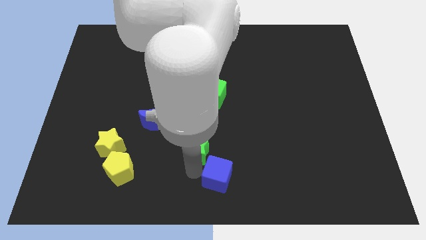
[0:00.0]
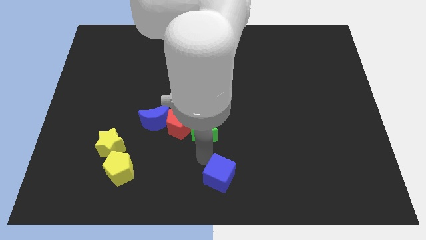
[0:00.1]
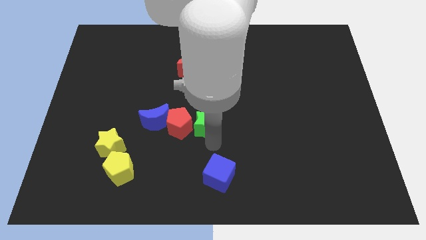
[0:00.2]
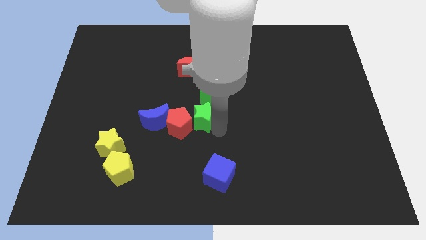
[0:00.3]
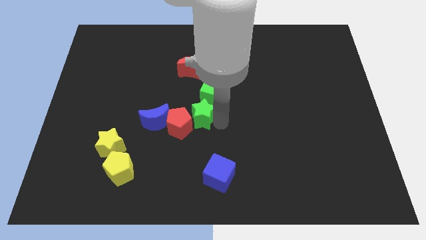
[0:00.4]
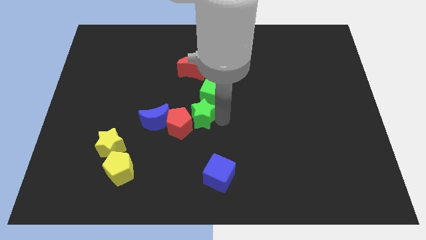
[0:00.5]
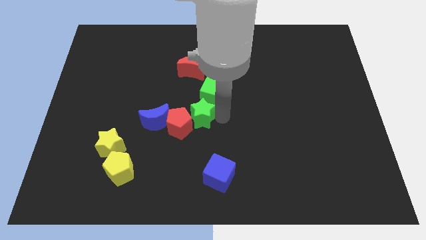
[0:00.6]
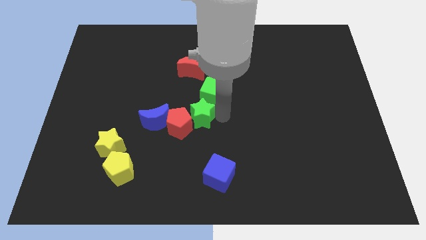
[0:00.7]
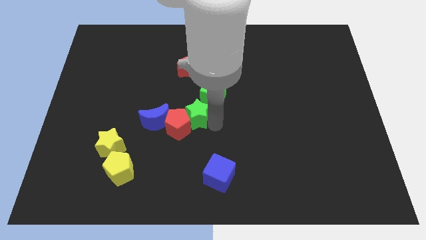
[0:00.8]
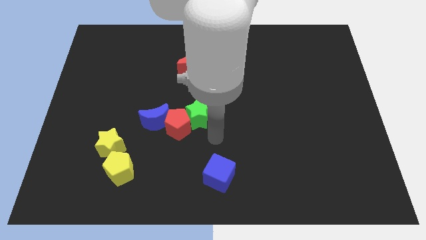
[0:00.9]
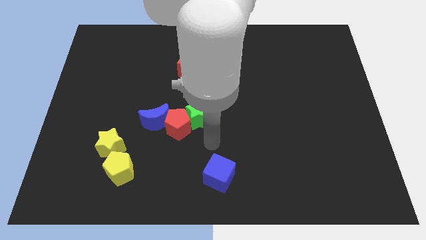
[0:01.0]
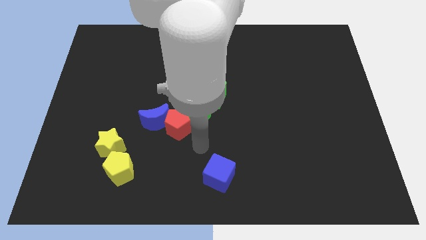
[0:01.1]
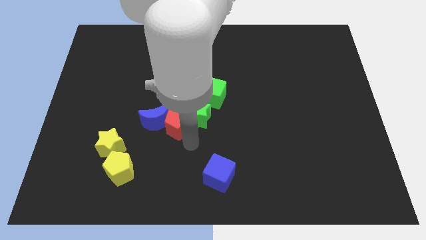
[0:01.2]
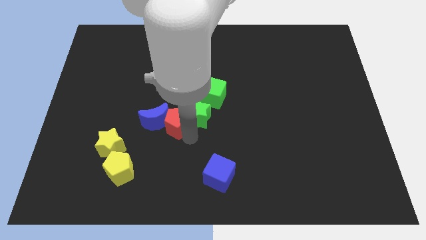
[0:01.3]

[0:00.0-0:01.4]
place the green star in between the red pentagon and the green cube

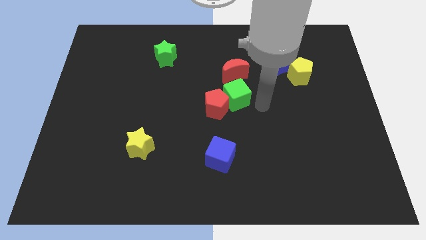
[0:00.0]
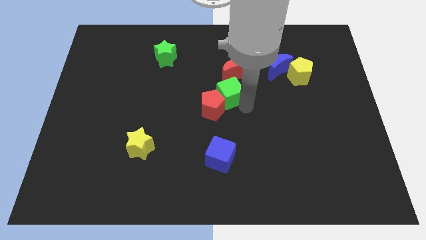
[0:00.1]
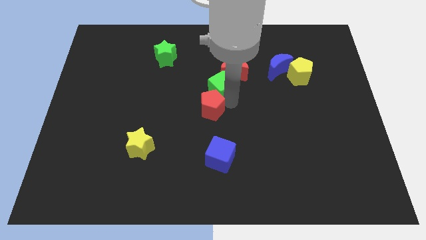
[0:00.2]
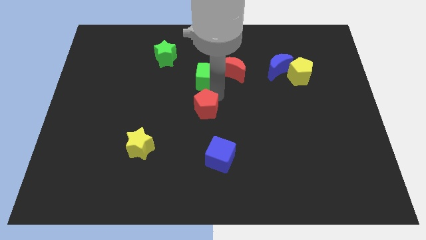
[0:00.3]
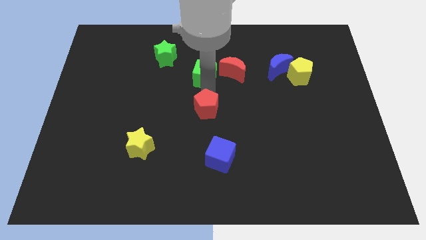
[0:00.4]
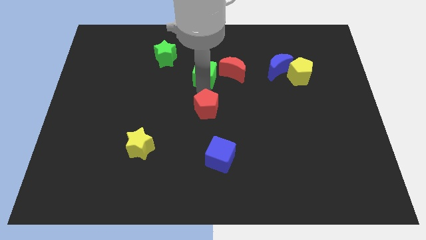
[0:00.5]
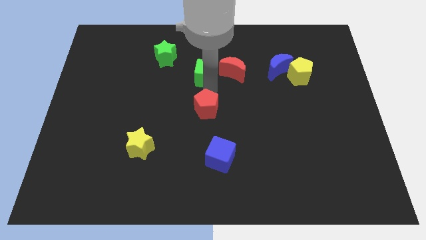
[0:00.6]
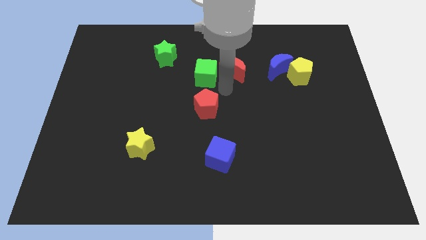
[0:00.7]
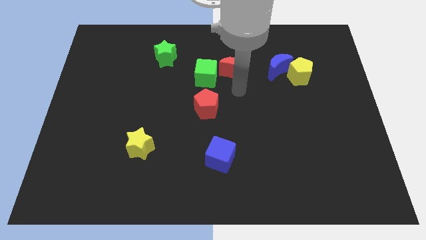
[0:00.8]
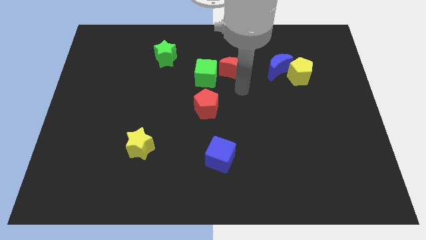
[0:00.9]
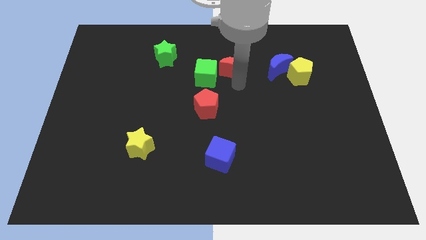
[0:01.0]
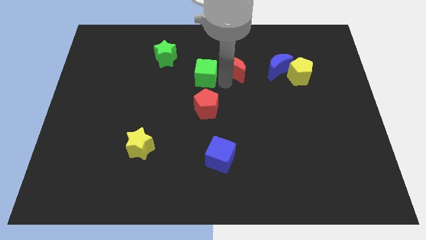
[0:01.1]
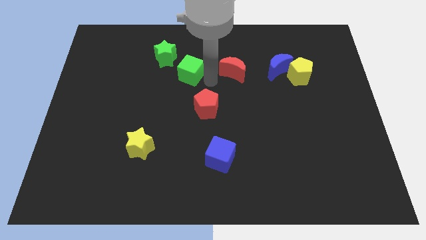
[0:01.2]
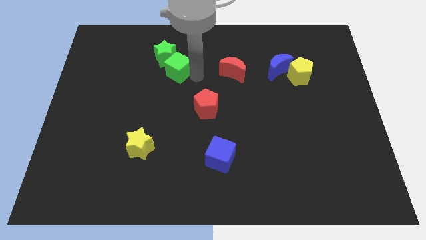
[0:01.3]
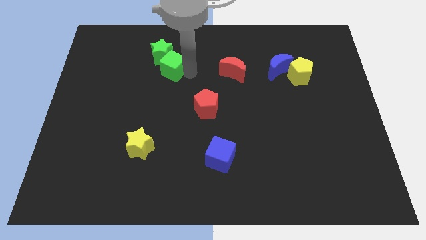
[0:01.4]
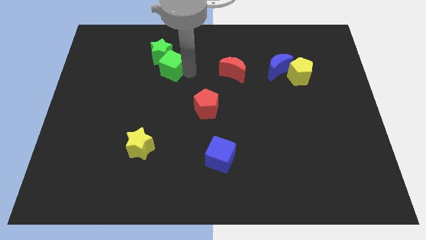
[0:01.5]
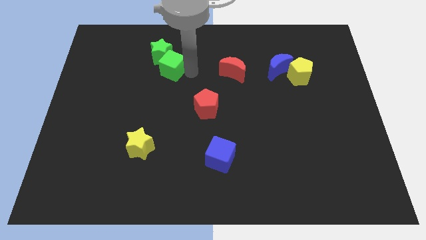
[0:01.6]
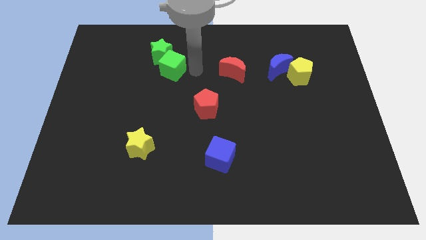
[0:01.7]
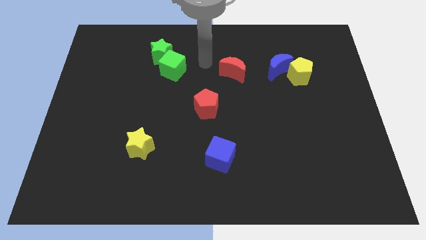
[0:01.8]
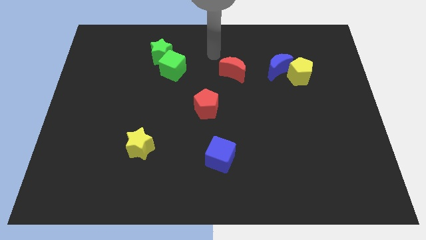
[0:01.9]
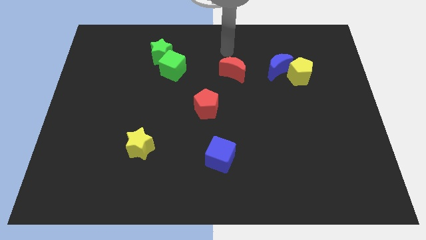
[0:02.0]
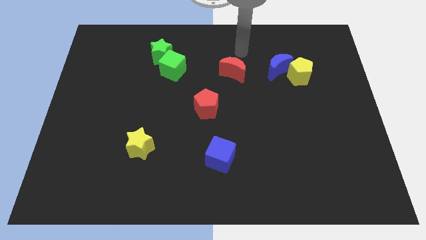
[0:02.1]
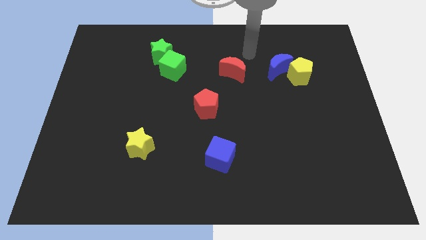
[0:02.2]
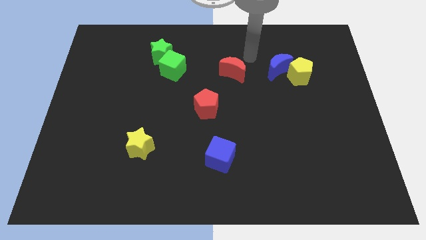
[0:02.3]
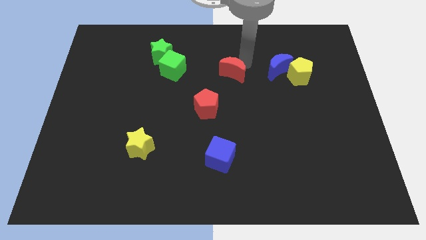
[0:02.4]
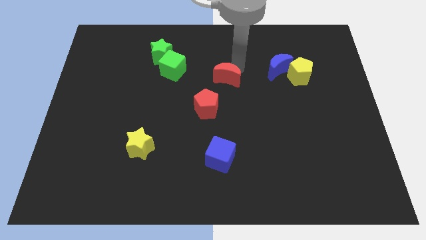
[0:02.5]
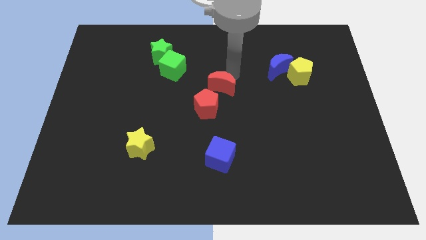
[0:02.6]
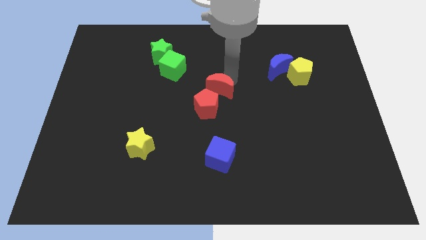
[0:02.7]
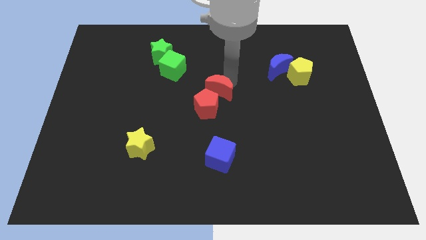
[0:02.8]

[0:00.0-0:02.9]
push the green blocks and red blocks in different directions

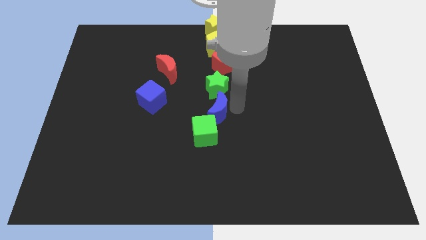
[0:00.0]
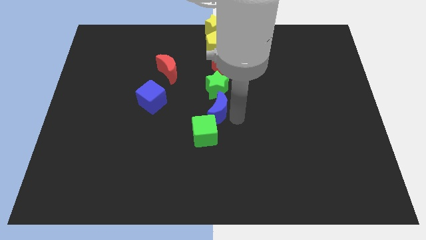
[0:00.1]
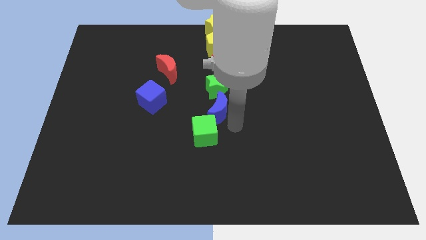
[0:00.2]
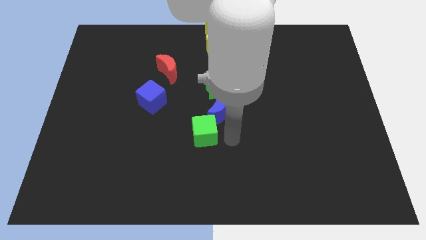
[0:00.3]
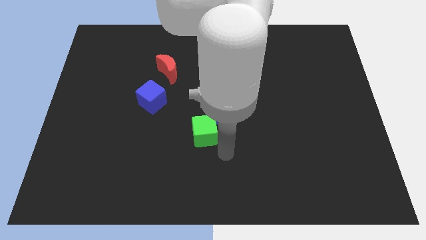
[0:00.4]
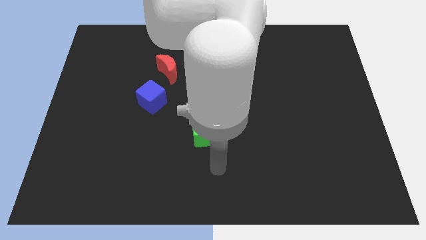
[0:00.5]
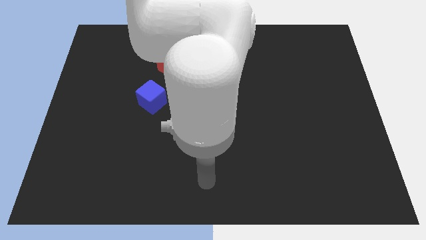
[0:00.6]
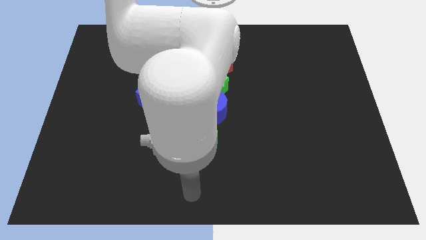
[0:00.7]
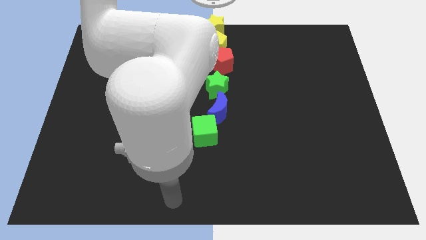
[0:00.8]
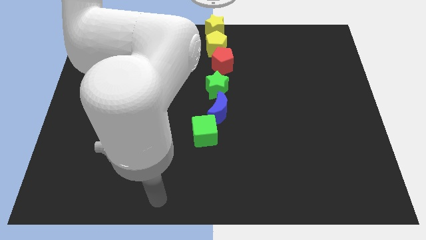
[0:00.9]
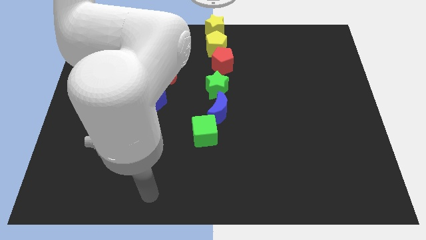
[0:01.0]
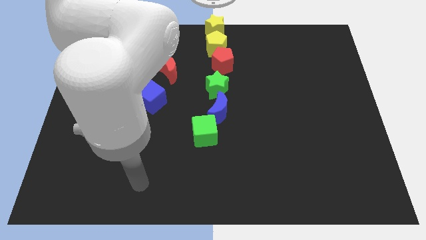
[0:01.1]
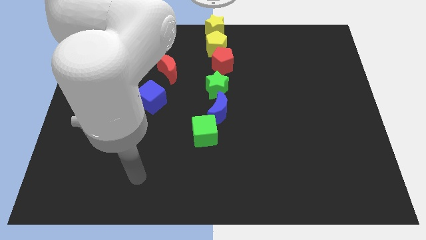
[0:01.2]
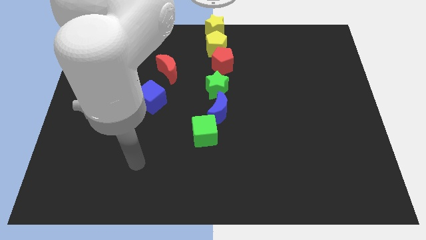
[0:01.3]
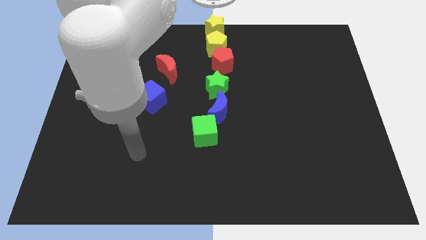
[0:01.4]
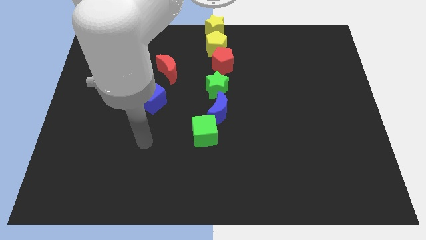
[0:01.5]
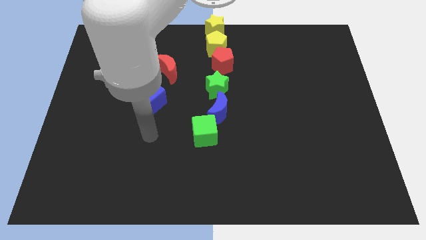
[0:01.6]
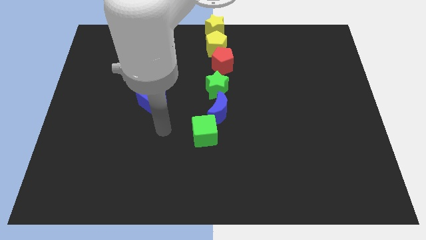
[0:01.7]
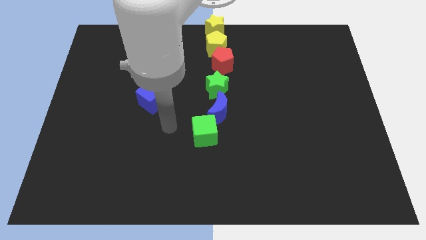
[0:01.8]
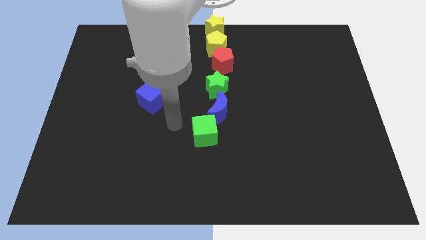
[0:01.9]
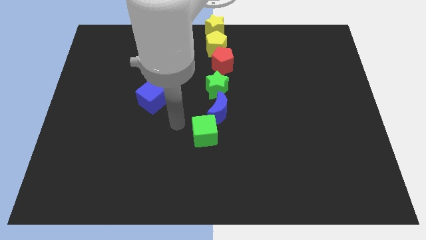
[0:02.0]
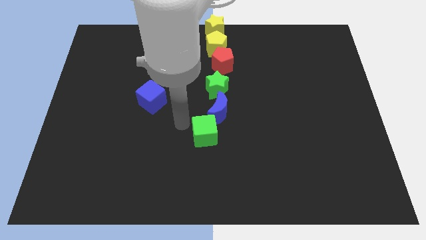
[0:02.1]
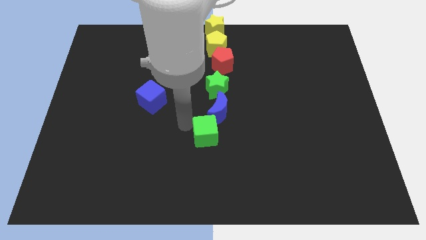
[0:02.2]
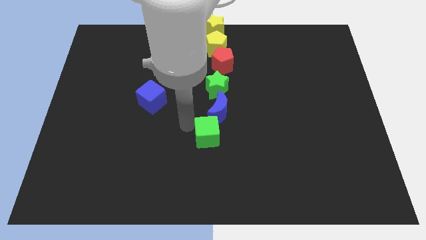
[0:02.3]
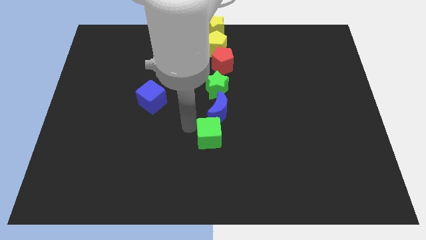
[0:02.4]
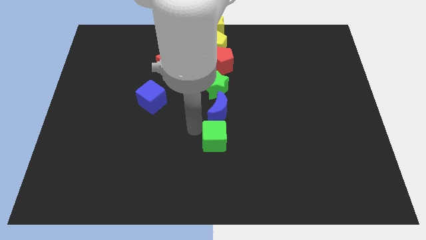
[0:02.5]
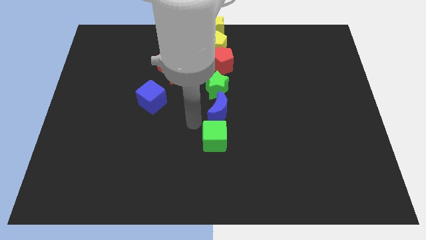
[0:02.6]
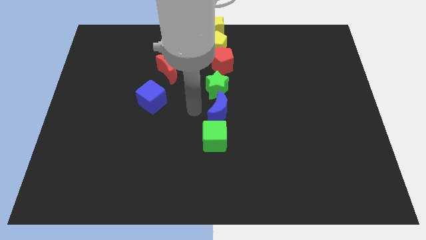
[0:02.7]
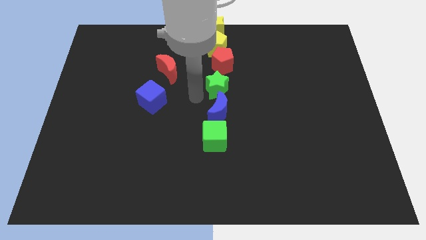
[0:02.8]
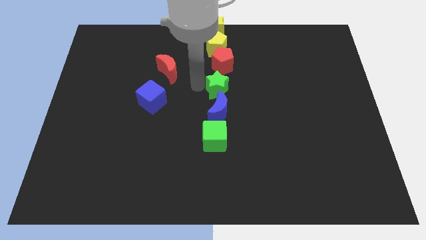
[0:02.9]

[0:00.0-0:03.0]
place green cube below blue crescent

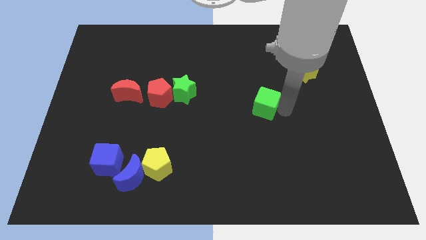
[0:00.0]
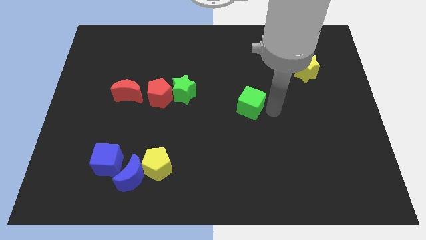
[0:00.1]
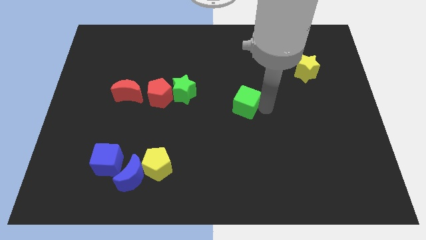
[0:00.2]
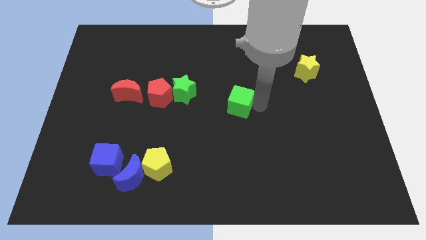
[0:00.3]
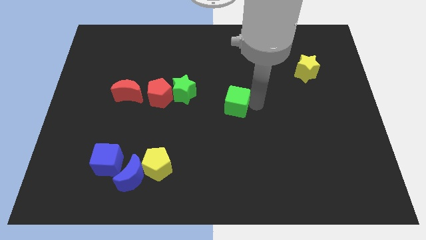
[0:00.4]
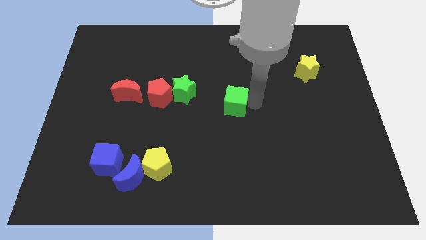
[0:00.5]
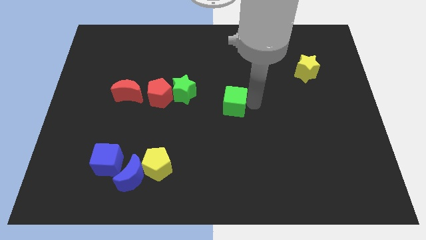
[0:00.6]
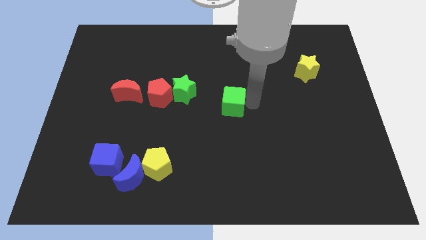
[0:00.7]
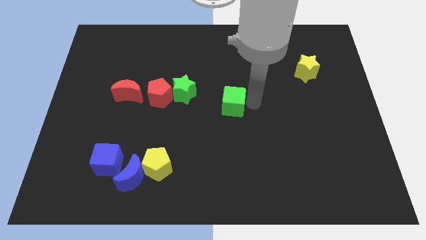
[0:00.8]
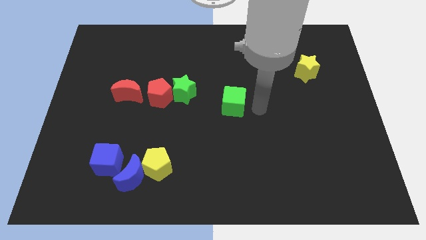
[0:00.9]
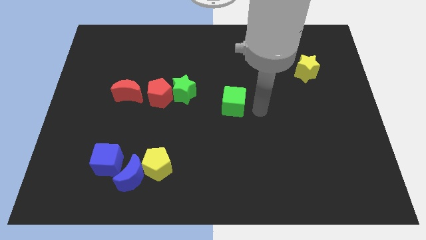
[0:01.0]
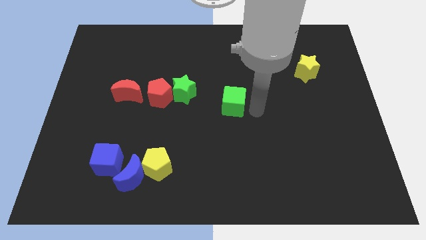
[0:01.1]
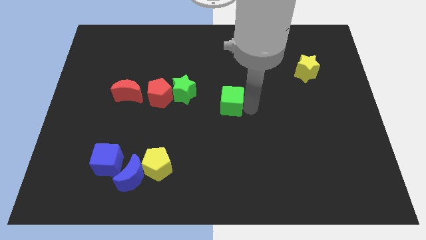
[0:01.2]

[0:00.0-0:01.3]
move the green cube towards the left side

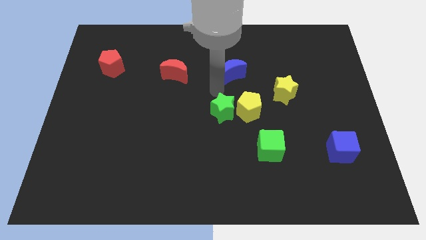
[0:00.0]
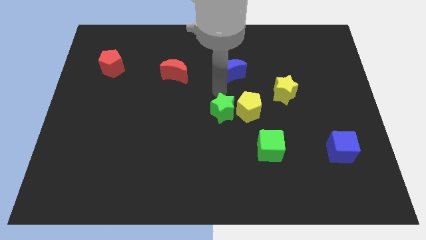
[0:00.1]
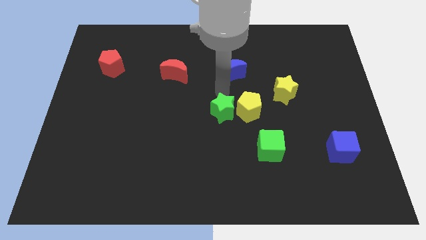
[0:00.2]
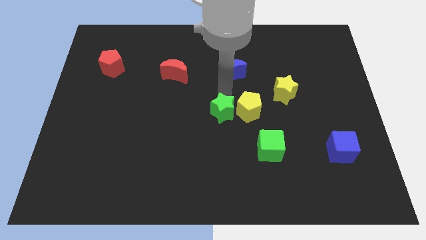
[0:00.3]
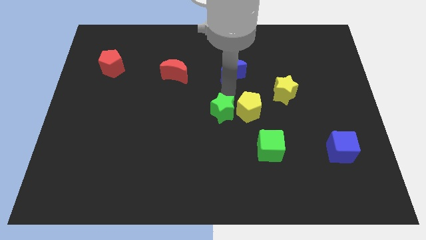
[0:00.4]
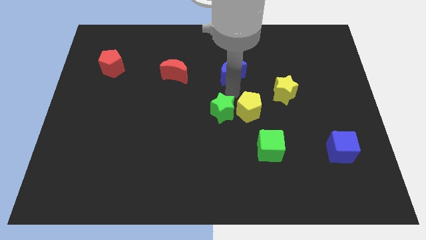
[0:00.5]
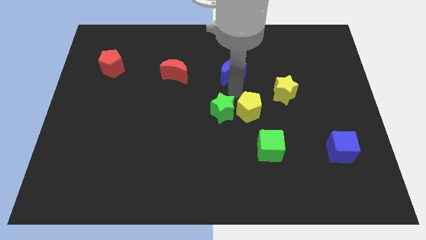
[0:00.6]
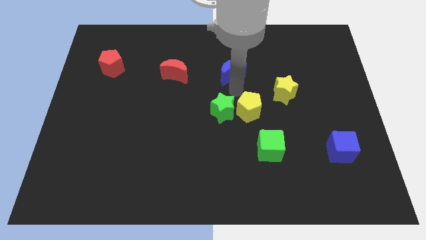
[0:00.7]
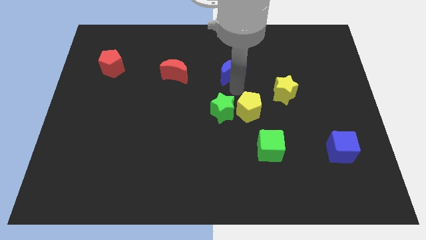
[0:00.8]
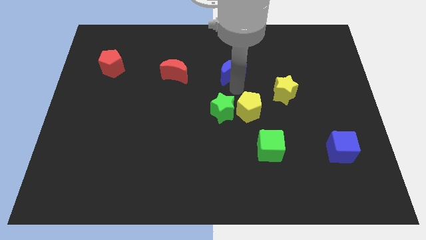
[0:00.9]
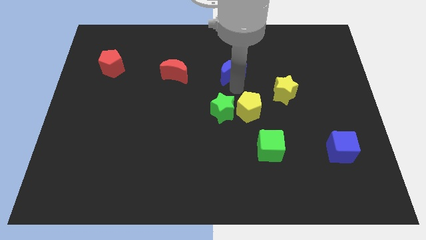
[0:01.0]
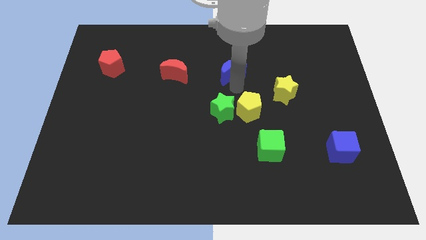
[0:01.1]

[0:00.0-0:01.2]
move your arm towards the bottom of the blue crescent
